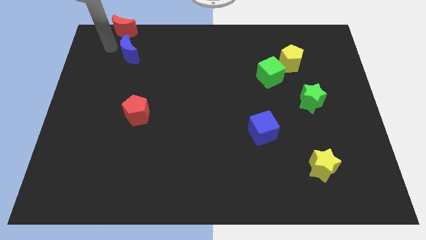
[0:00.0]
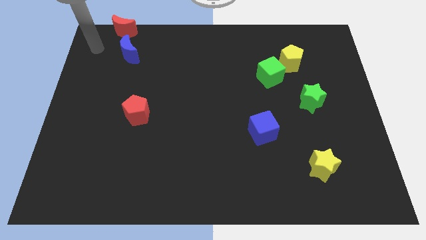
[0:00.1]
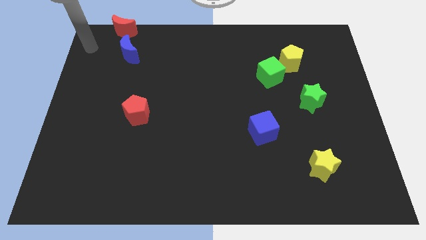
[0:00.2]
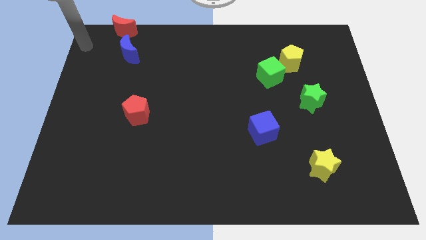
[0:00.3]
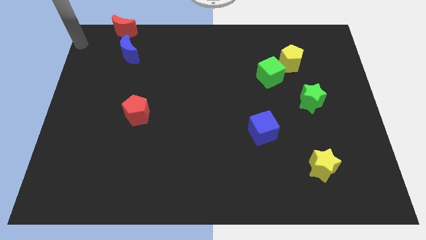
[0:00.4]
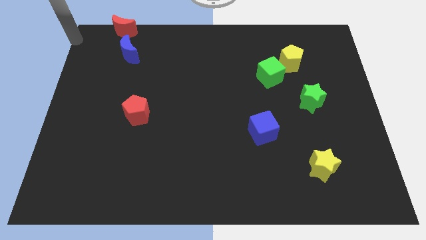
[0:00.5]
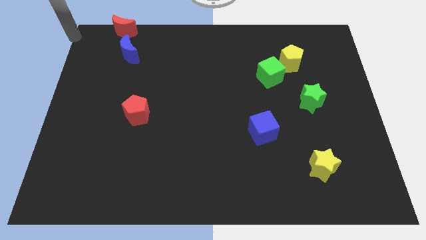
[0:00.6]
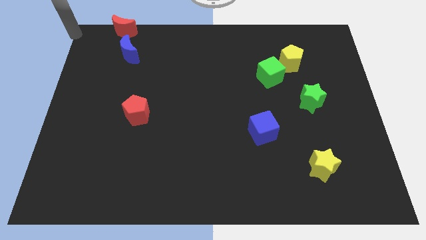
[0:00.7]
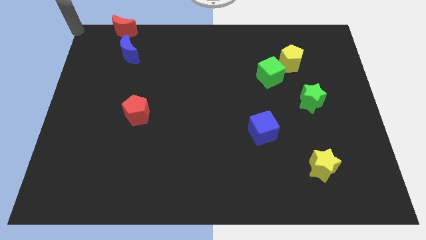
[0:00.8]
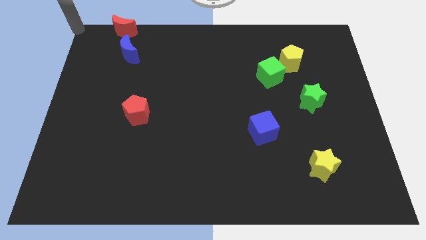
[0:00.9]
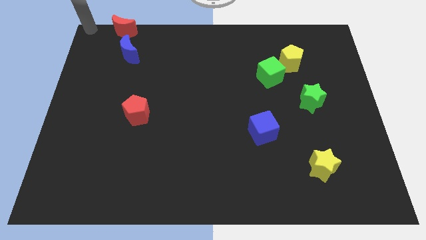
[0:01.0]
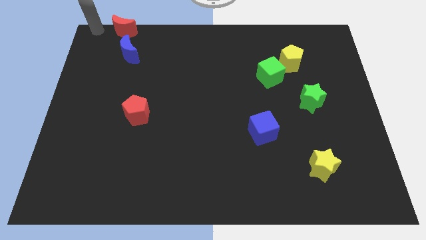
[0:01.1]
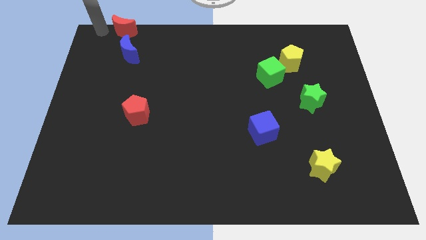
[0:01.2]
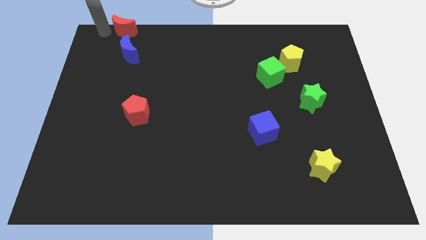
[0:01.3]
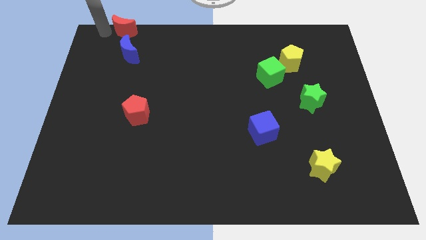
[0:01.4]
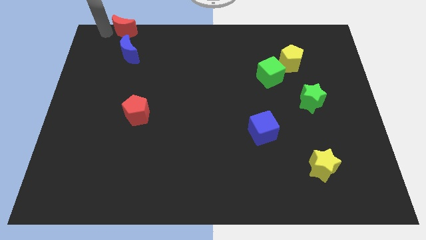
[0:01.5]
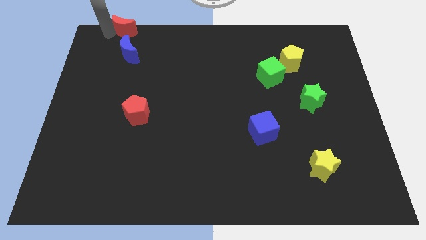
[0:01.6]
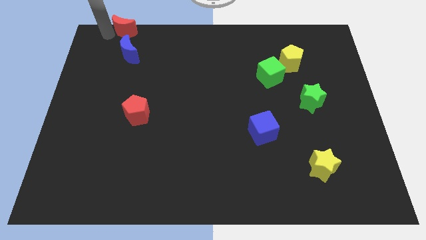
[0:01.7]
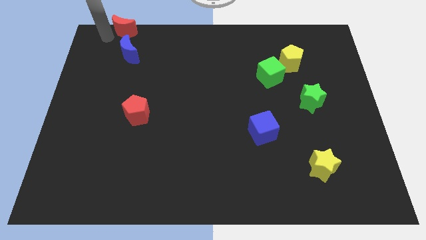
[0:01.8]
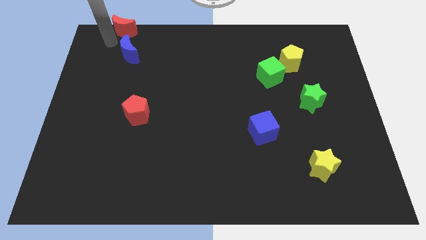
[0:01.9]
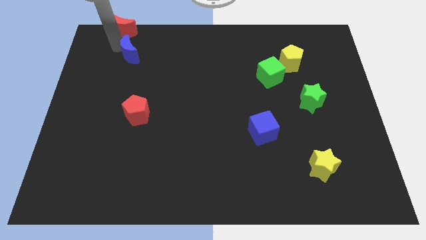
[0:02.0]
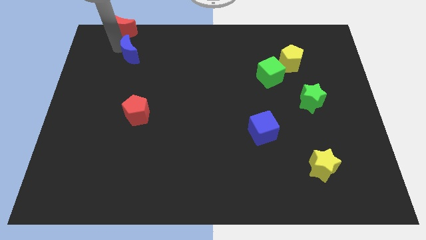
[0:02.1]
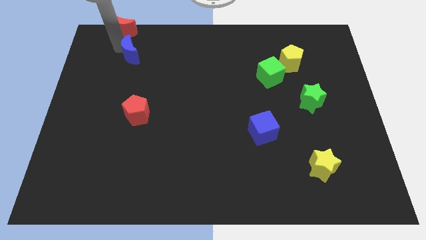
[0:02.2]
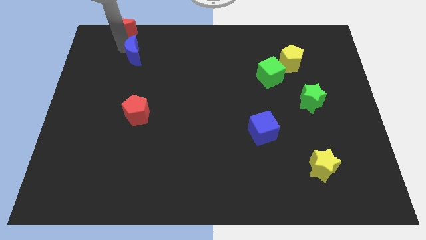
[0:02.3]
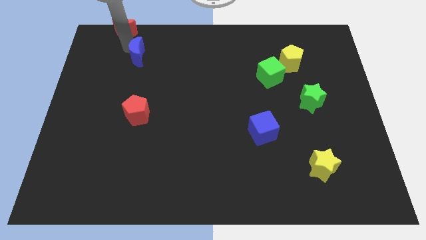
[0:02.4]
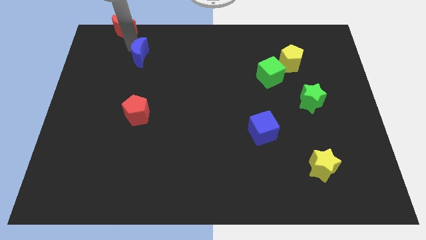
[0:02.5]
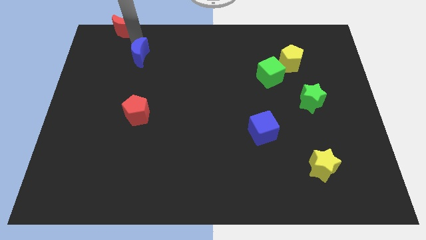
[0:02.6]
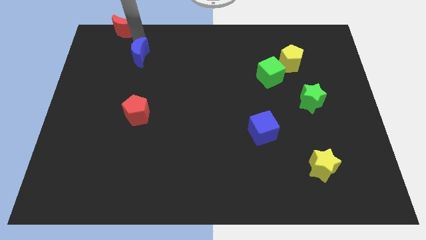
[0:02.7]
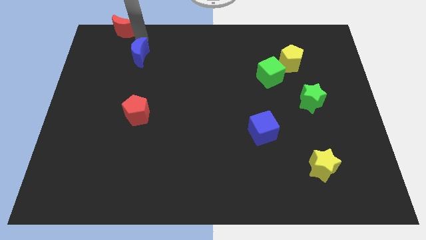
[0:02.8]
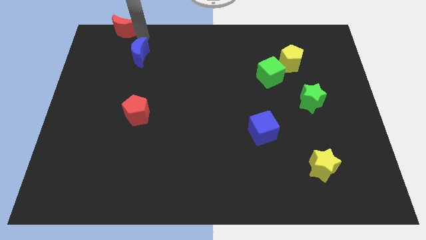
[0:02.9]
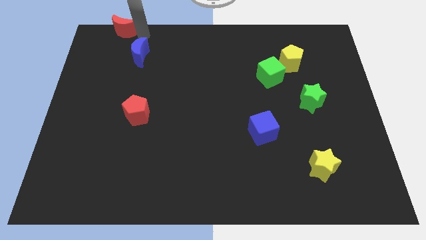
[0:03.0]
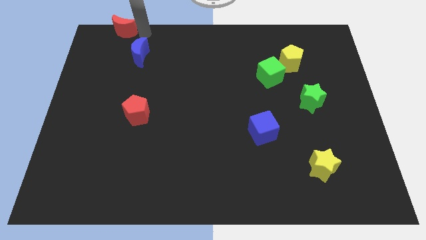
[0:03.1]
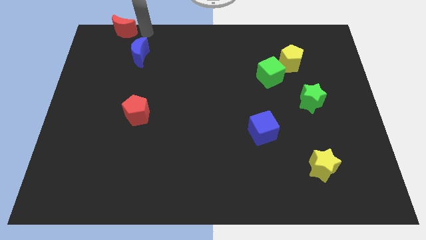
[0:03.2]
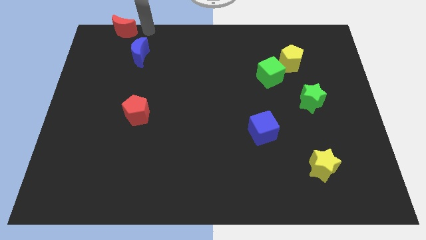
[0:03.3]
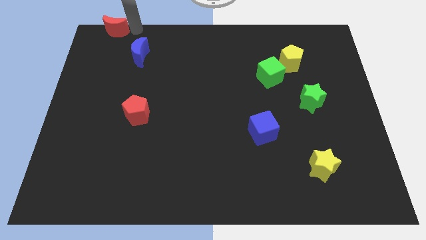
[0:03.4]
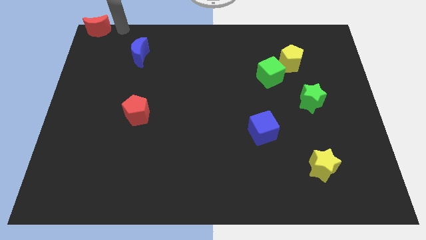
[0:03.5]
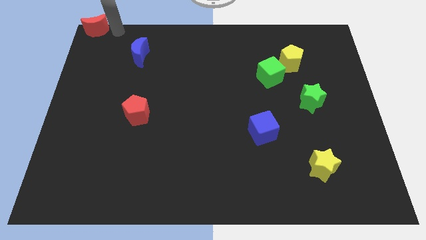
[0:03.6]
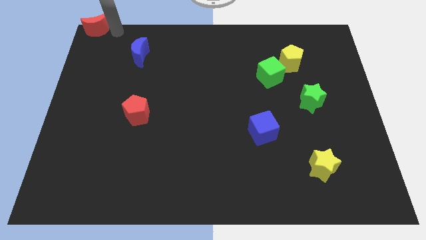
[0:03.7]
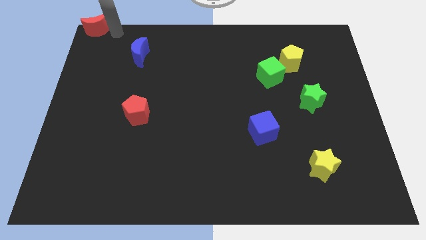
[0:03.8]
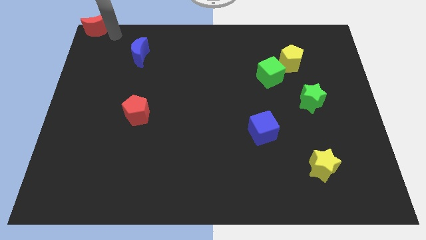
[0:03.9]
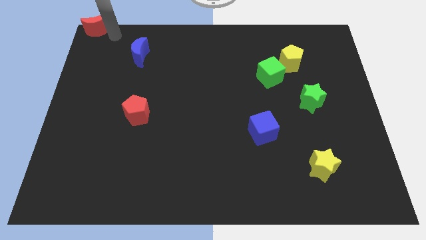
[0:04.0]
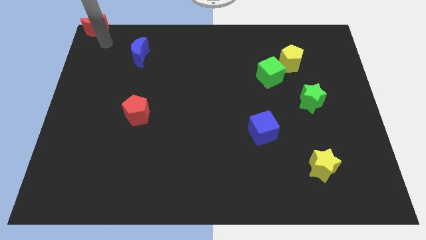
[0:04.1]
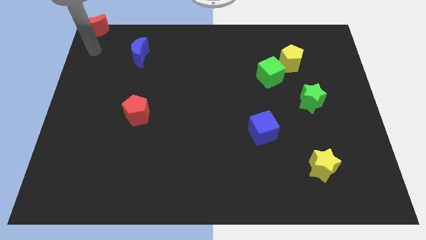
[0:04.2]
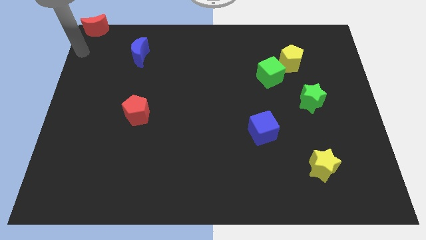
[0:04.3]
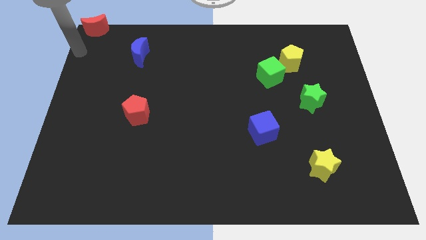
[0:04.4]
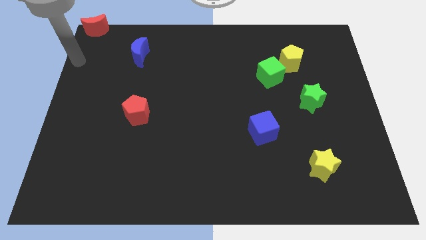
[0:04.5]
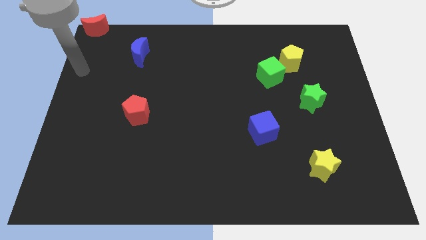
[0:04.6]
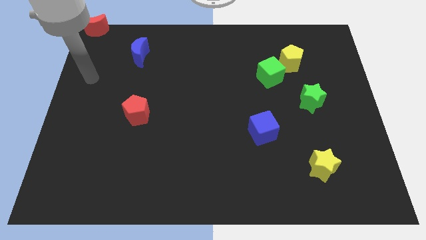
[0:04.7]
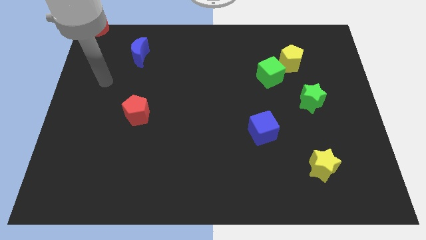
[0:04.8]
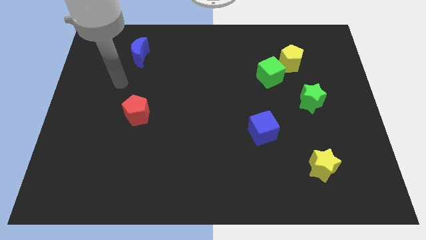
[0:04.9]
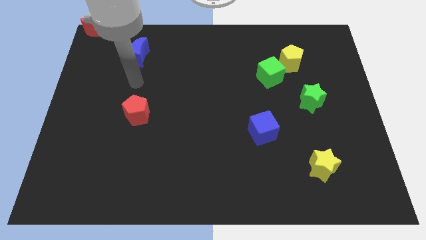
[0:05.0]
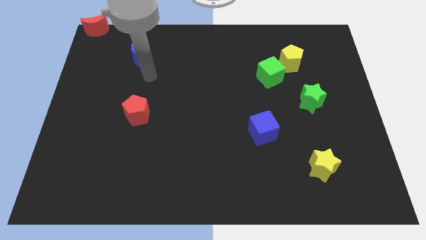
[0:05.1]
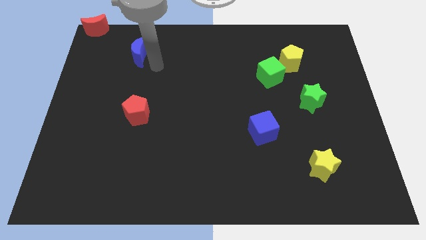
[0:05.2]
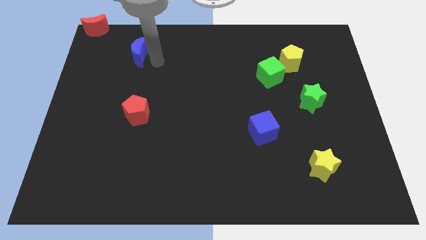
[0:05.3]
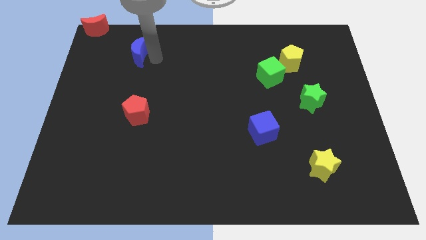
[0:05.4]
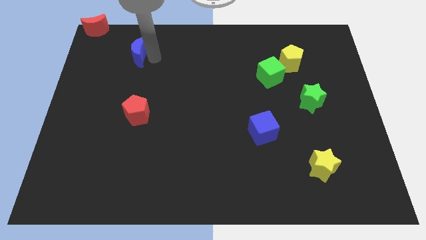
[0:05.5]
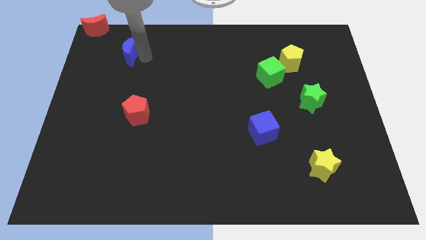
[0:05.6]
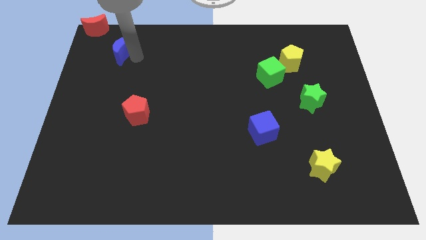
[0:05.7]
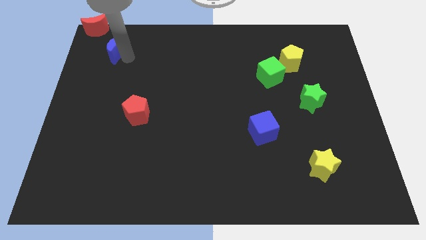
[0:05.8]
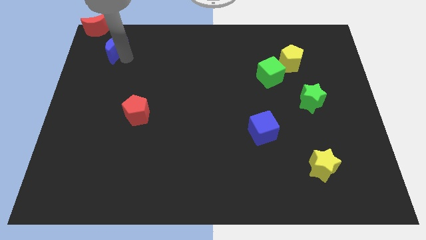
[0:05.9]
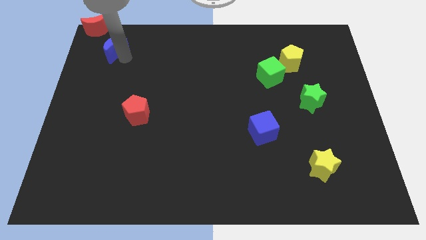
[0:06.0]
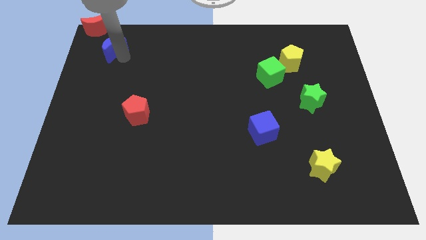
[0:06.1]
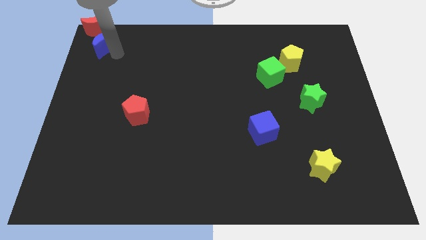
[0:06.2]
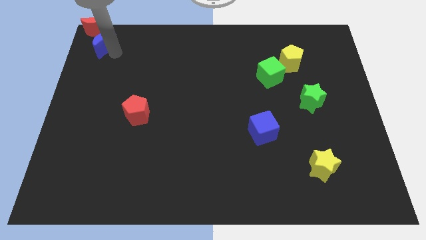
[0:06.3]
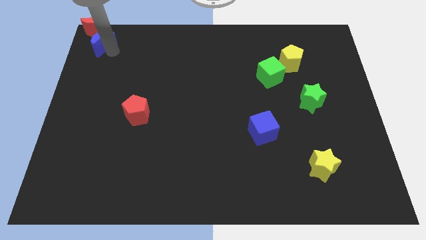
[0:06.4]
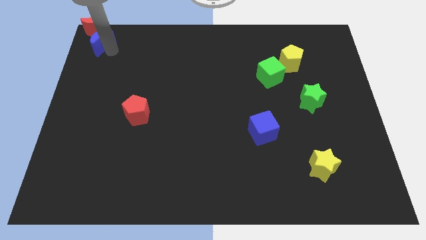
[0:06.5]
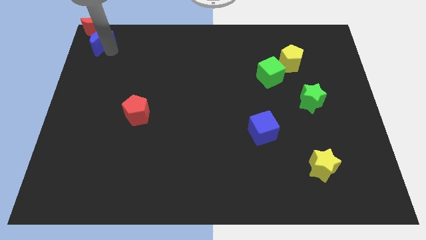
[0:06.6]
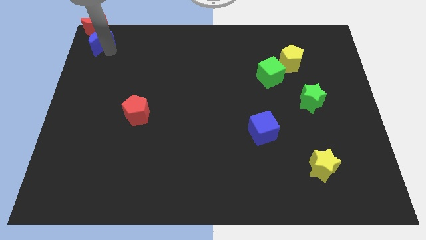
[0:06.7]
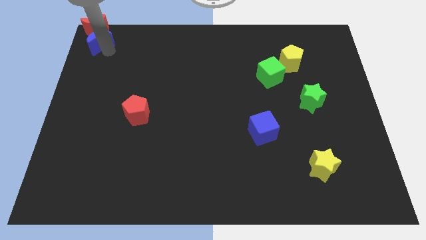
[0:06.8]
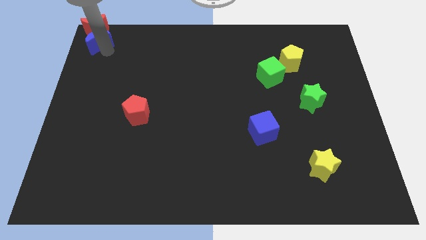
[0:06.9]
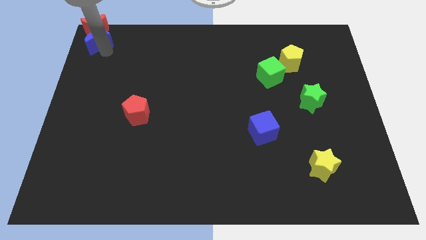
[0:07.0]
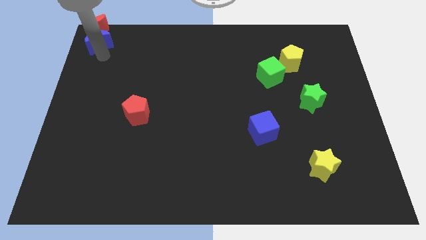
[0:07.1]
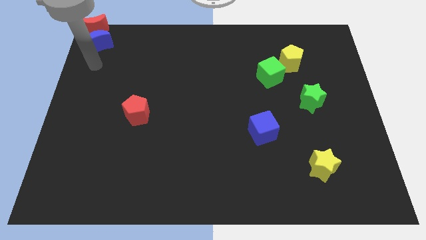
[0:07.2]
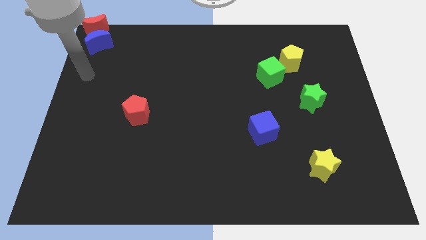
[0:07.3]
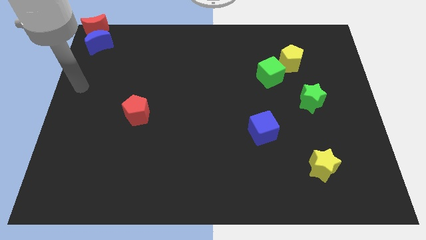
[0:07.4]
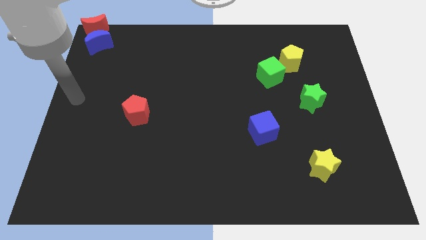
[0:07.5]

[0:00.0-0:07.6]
place blue crescent close to the red crescent

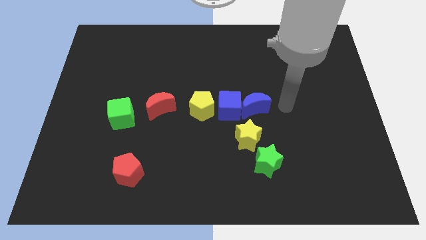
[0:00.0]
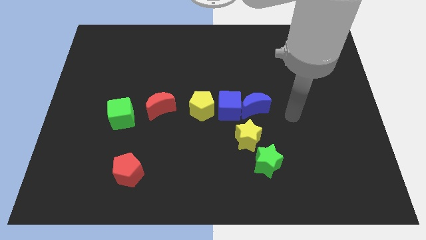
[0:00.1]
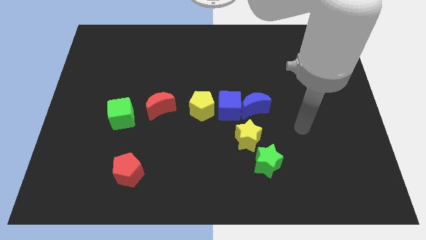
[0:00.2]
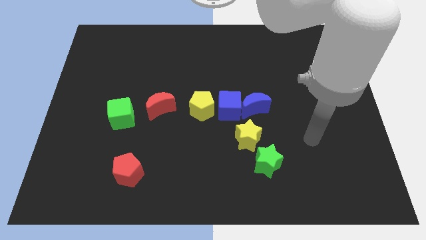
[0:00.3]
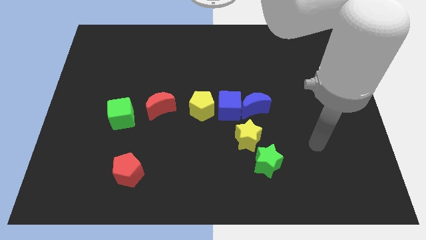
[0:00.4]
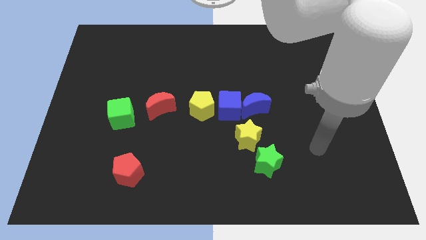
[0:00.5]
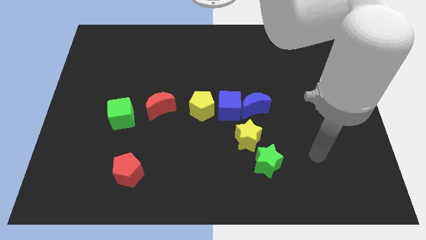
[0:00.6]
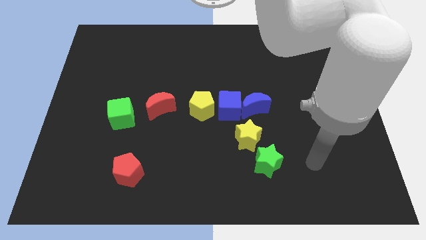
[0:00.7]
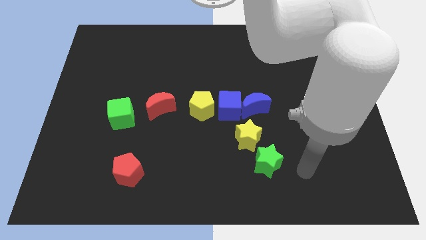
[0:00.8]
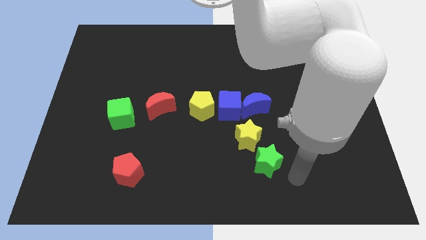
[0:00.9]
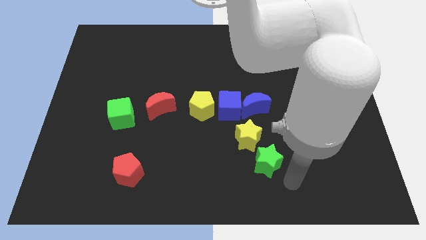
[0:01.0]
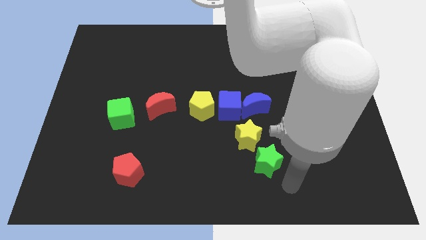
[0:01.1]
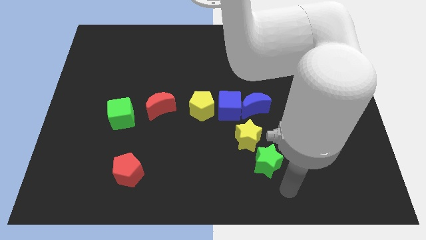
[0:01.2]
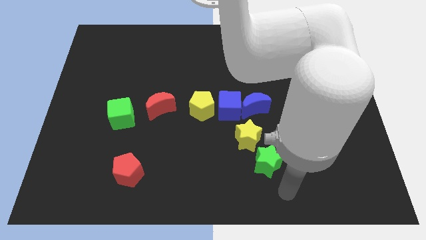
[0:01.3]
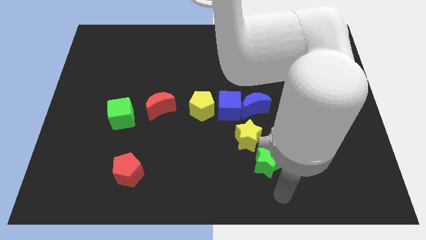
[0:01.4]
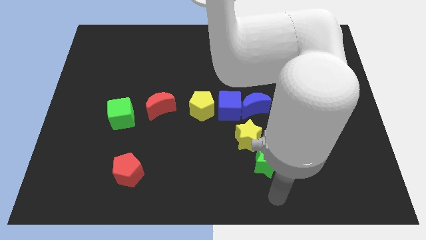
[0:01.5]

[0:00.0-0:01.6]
move your arm away from the blue moon
